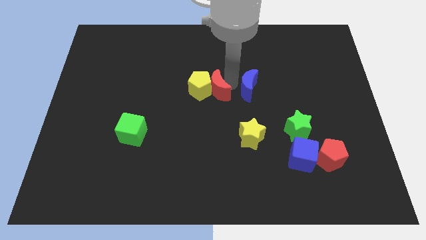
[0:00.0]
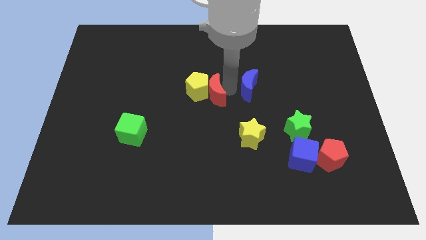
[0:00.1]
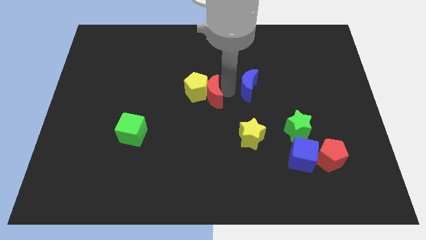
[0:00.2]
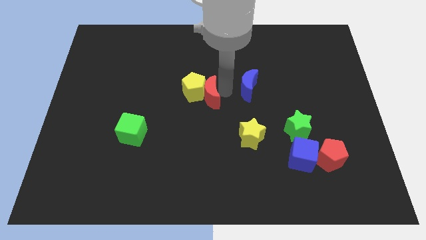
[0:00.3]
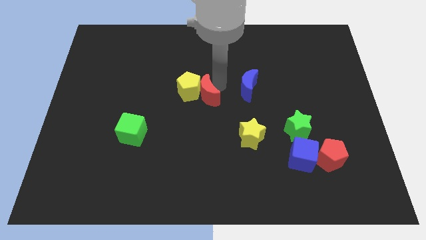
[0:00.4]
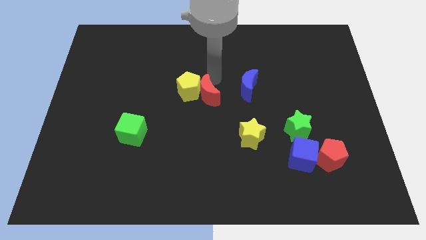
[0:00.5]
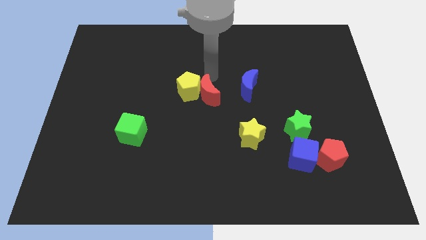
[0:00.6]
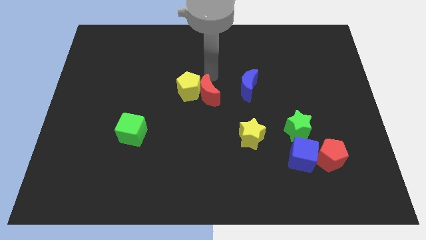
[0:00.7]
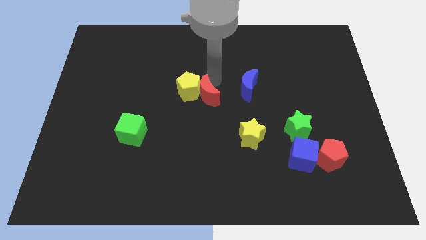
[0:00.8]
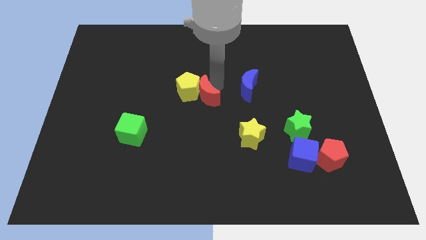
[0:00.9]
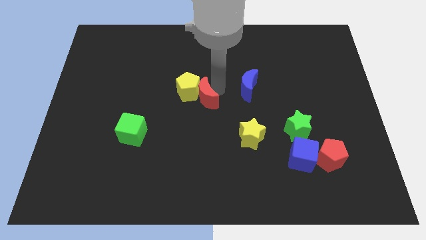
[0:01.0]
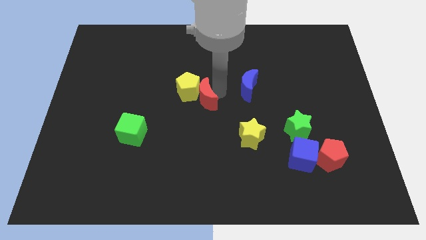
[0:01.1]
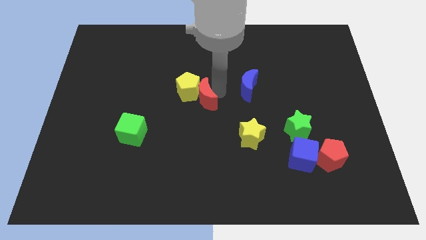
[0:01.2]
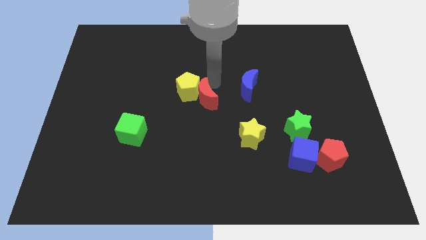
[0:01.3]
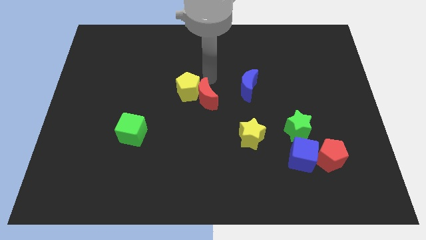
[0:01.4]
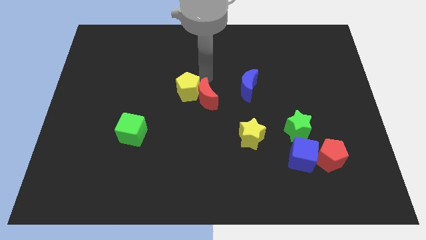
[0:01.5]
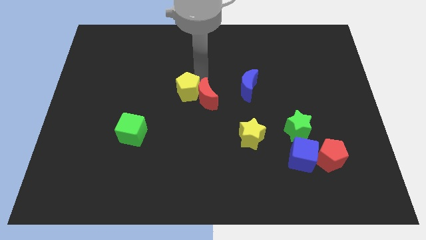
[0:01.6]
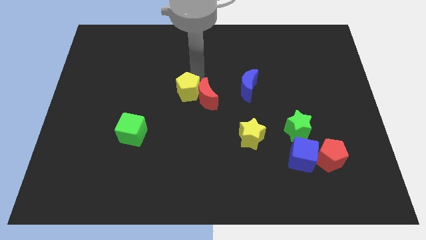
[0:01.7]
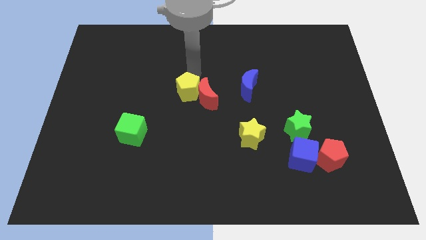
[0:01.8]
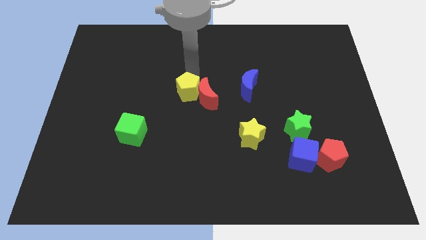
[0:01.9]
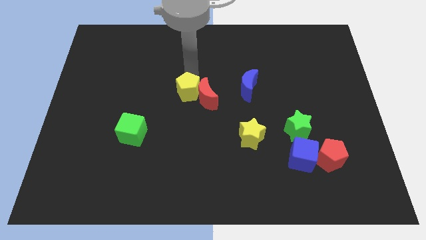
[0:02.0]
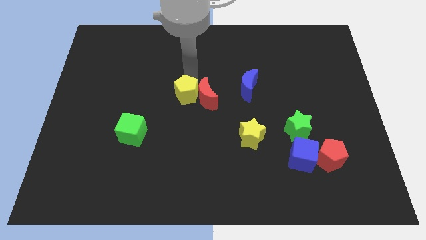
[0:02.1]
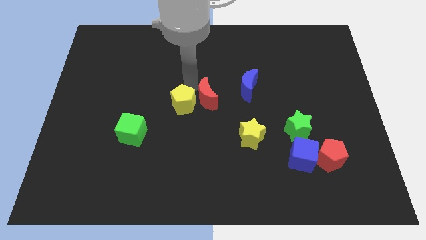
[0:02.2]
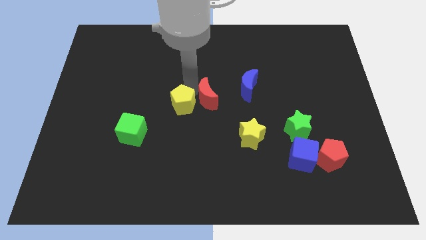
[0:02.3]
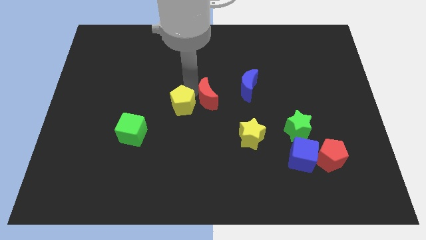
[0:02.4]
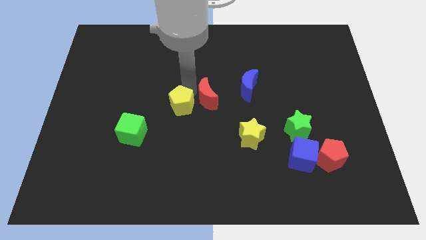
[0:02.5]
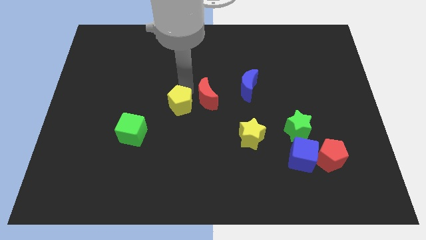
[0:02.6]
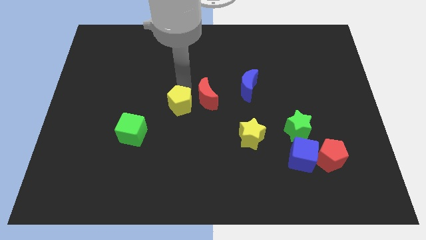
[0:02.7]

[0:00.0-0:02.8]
separate yellow pentagon from red crescent

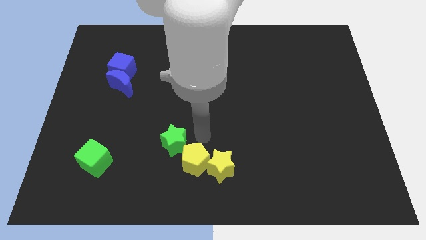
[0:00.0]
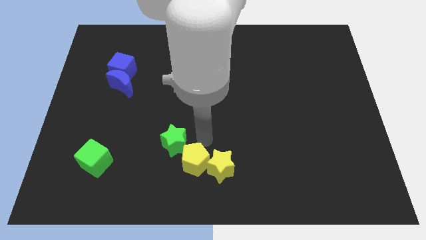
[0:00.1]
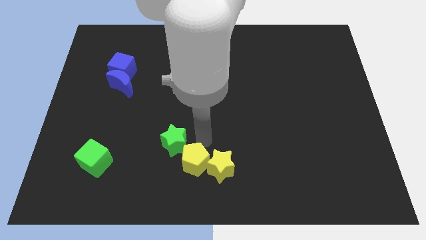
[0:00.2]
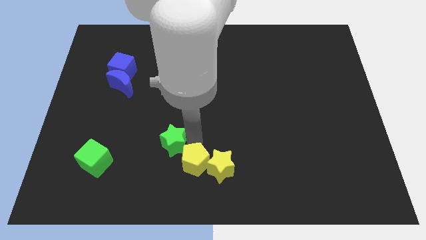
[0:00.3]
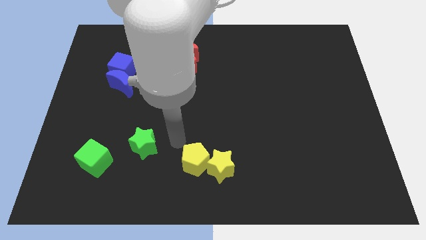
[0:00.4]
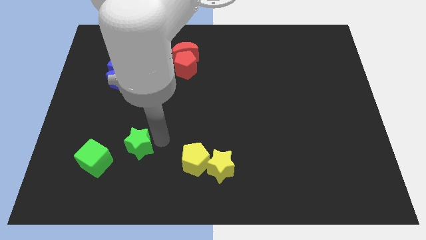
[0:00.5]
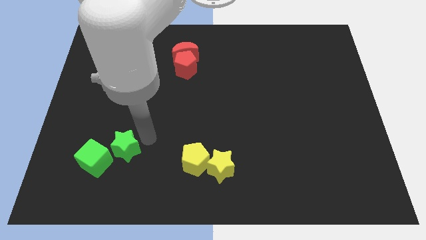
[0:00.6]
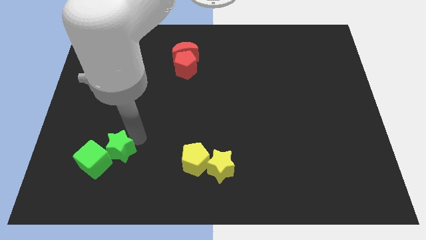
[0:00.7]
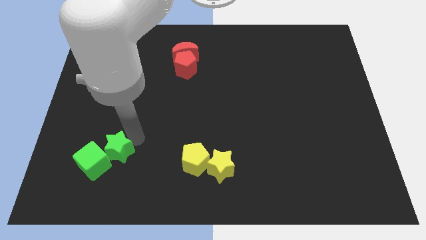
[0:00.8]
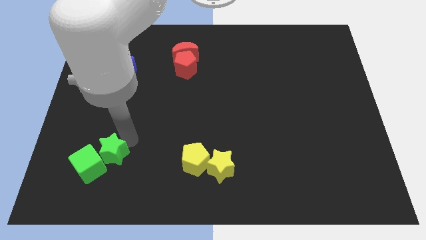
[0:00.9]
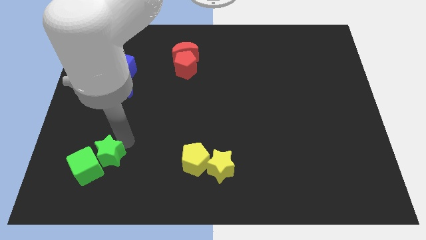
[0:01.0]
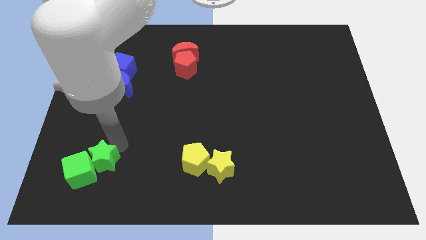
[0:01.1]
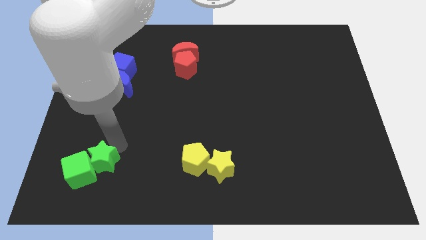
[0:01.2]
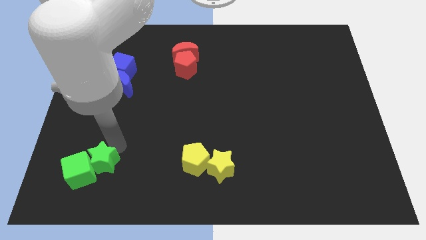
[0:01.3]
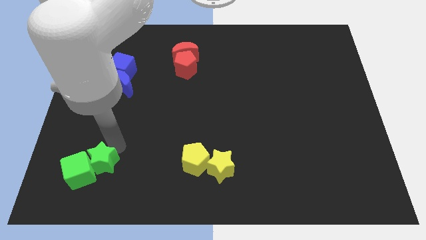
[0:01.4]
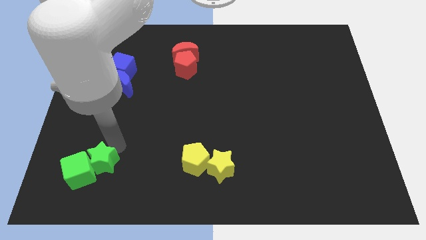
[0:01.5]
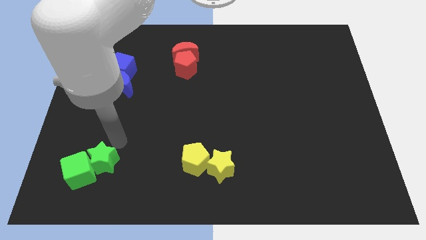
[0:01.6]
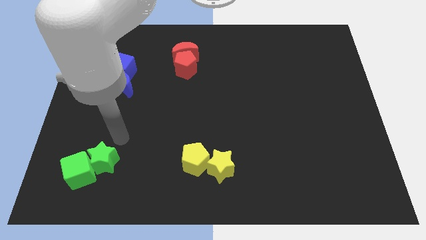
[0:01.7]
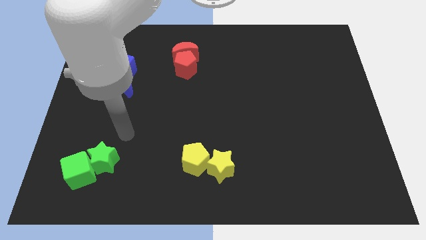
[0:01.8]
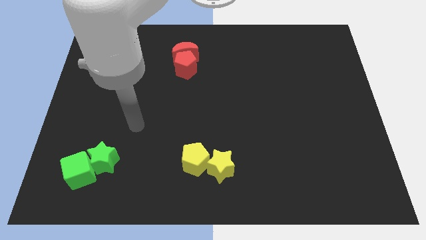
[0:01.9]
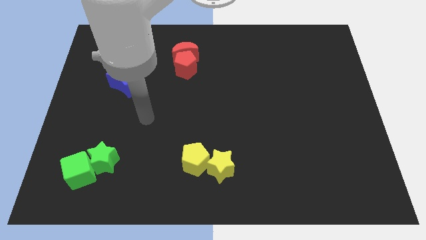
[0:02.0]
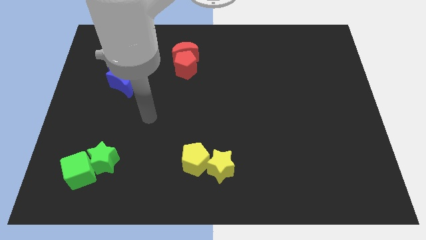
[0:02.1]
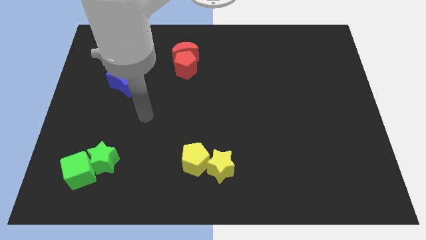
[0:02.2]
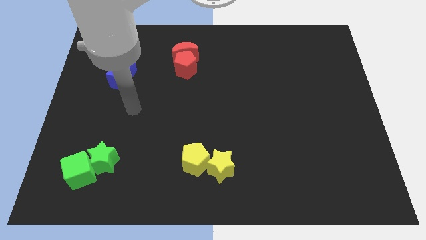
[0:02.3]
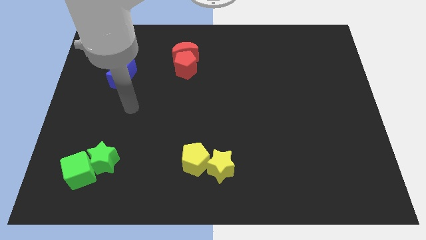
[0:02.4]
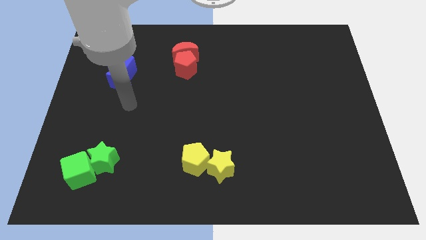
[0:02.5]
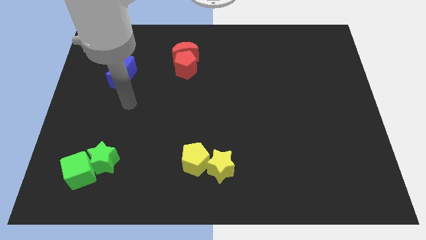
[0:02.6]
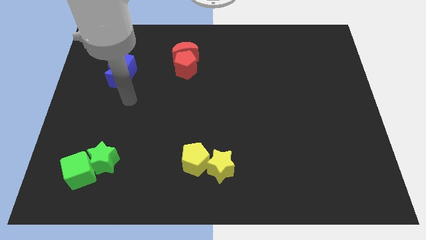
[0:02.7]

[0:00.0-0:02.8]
place the green star into the green cube

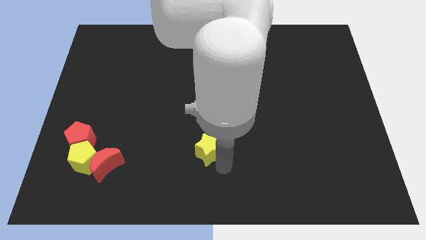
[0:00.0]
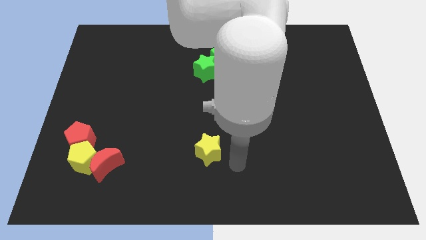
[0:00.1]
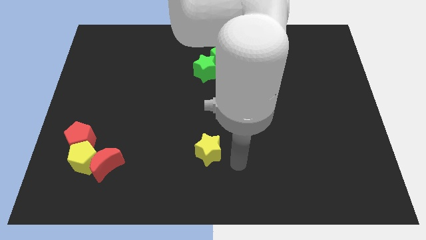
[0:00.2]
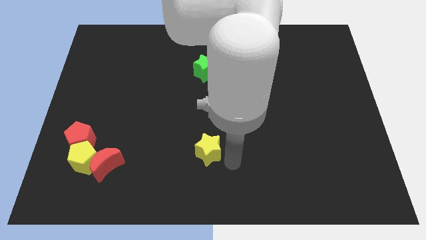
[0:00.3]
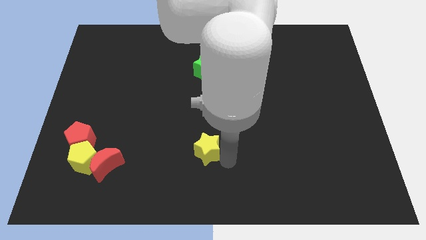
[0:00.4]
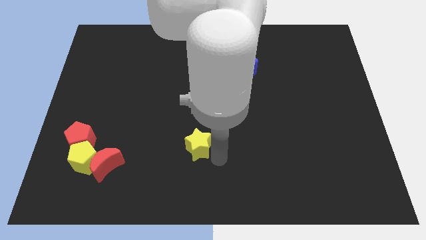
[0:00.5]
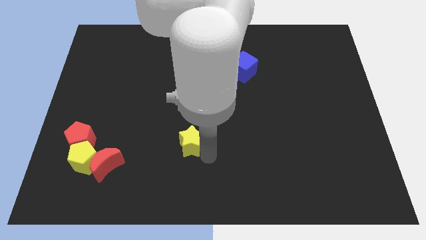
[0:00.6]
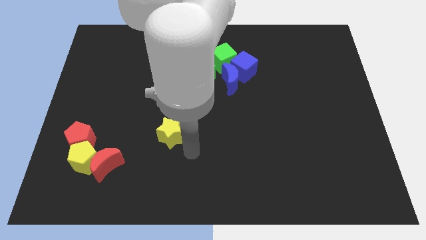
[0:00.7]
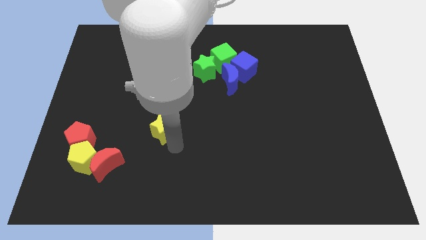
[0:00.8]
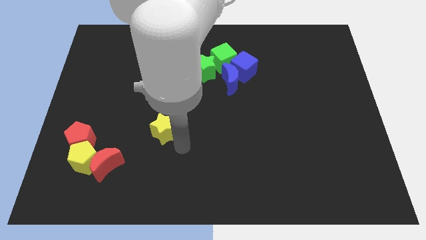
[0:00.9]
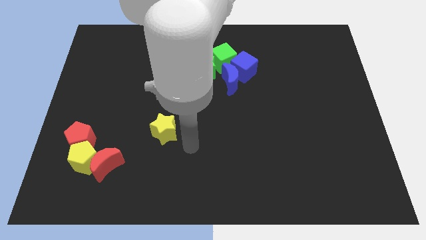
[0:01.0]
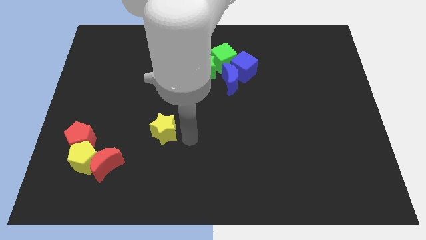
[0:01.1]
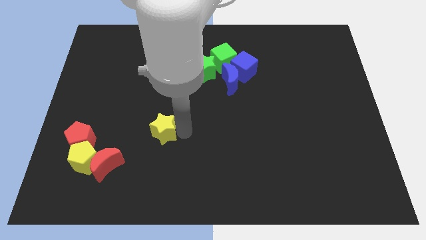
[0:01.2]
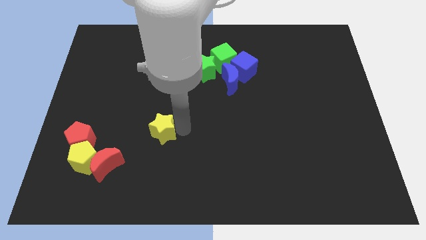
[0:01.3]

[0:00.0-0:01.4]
move yellow star towards left

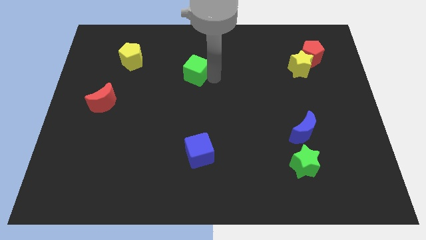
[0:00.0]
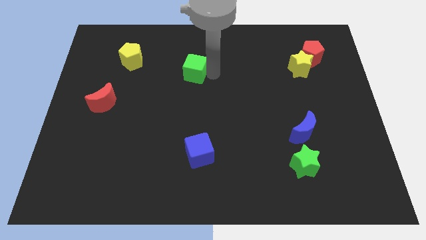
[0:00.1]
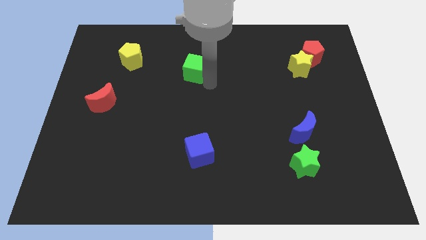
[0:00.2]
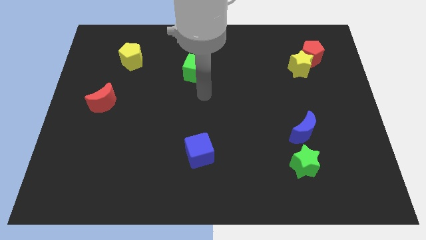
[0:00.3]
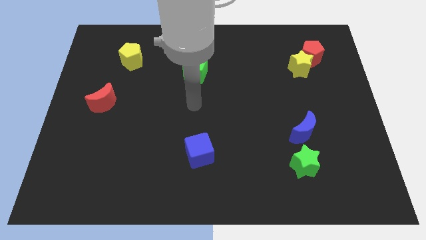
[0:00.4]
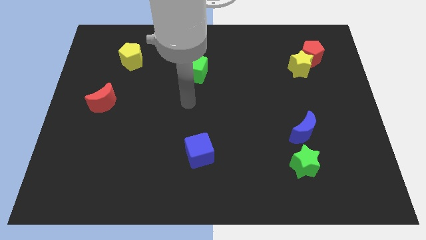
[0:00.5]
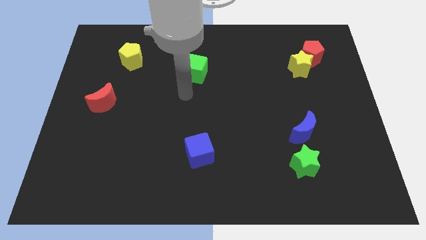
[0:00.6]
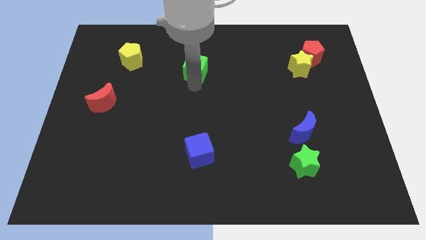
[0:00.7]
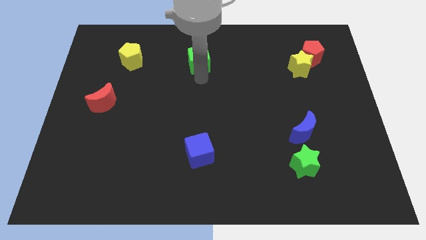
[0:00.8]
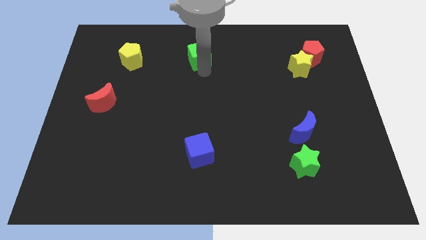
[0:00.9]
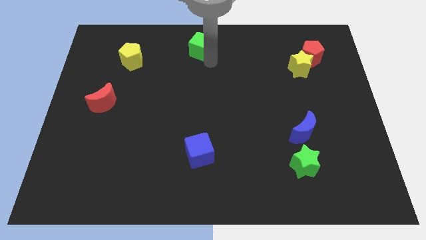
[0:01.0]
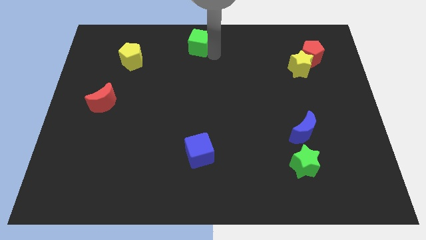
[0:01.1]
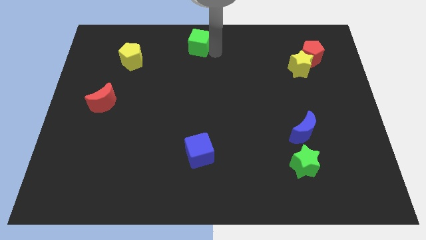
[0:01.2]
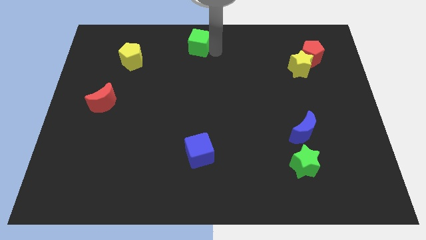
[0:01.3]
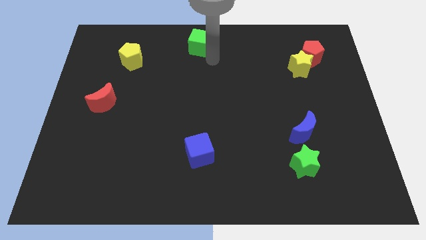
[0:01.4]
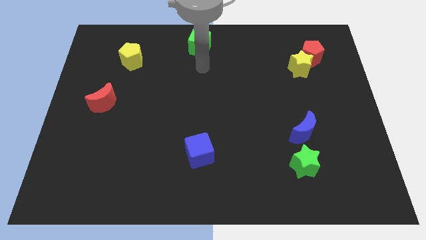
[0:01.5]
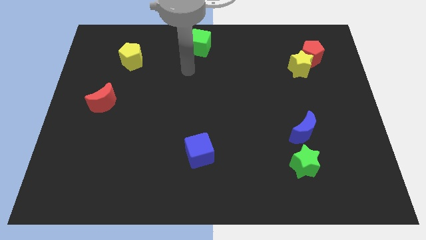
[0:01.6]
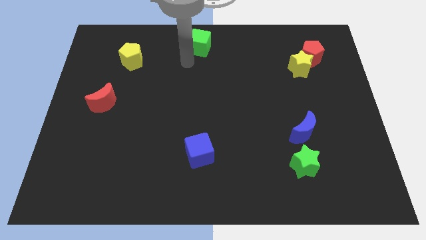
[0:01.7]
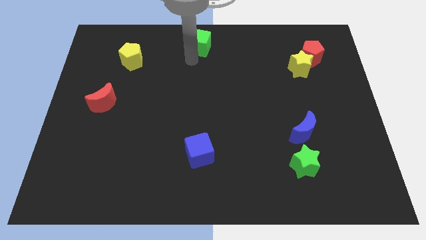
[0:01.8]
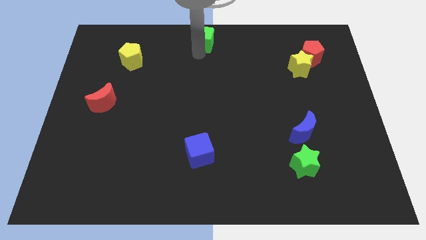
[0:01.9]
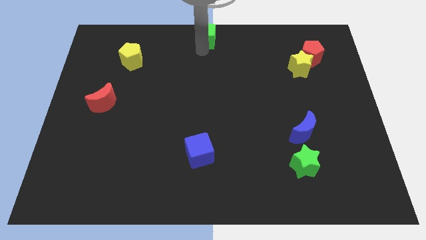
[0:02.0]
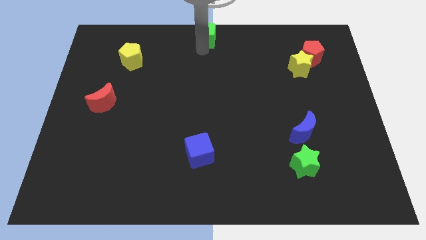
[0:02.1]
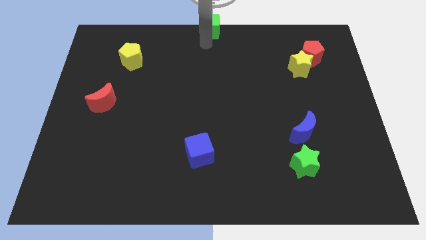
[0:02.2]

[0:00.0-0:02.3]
move the green cube vertical above blue cube
